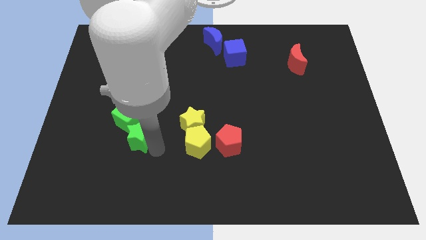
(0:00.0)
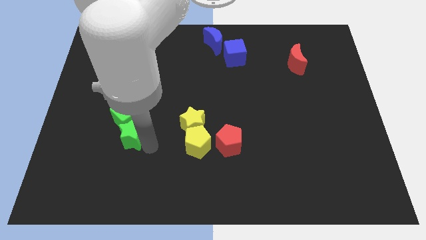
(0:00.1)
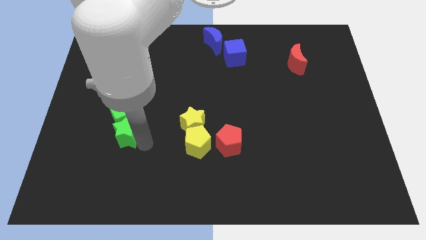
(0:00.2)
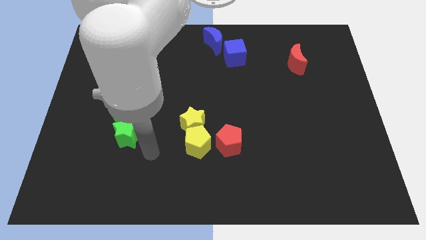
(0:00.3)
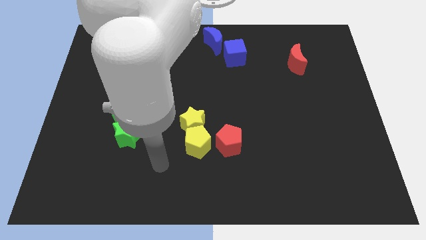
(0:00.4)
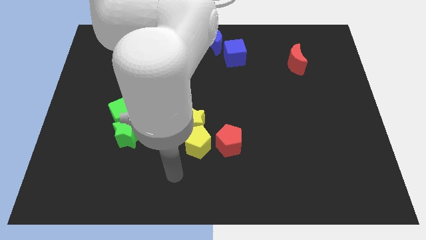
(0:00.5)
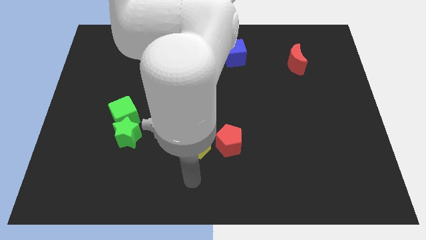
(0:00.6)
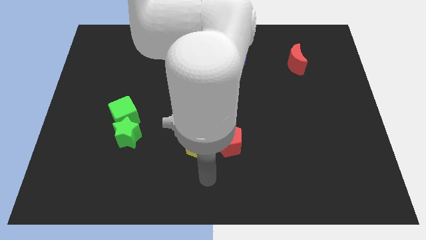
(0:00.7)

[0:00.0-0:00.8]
push the green star into the green cube

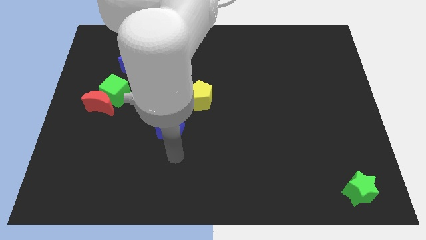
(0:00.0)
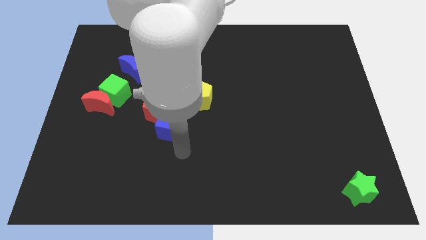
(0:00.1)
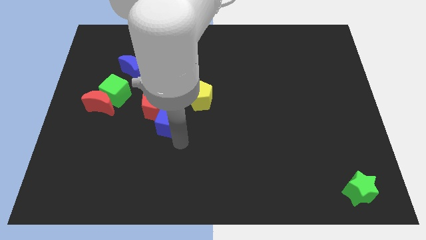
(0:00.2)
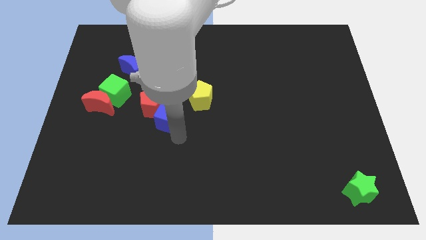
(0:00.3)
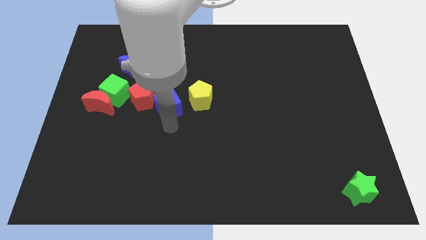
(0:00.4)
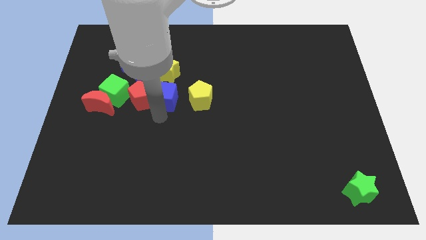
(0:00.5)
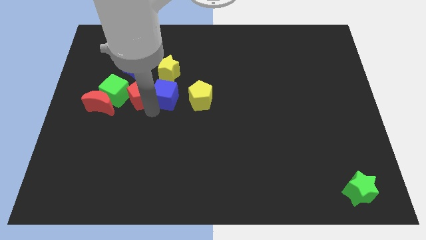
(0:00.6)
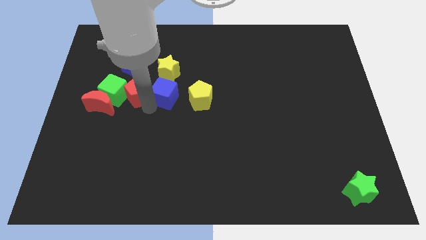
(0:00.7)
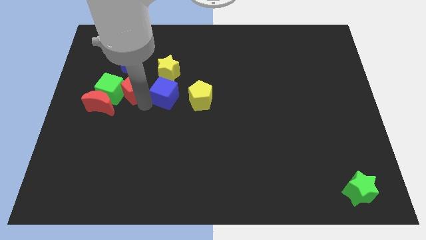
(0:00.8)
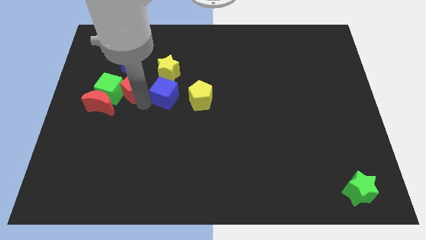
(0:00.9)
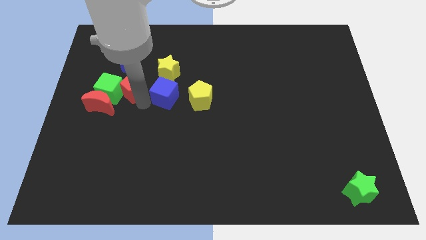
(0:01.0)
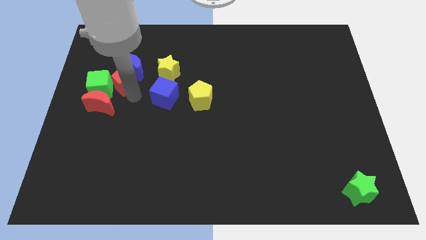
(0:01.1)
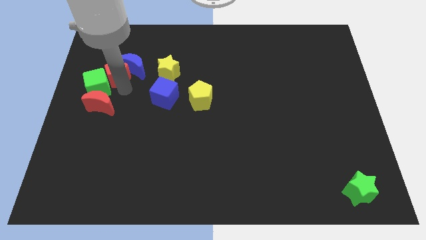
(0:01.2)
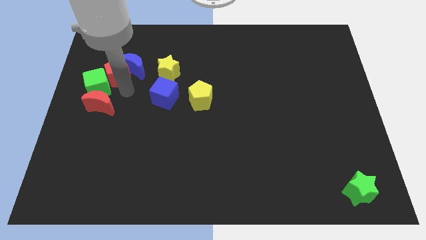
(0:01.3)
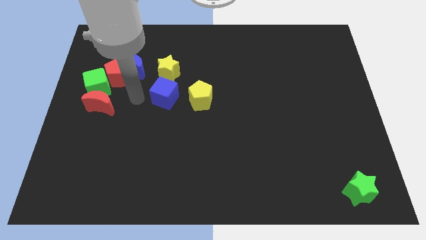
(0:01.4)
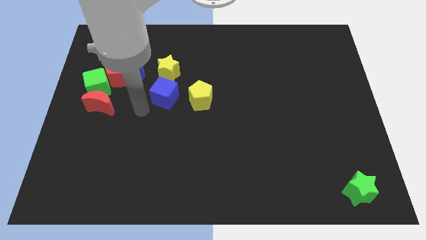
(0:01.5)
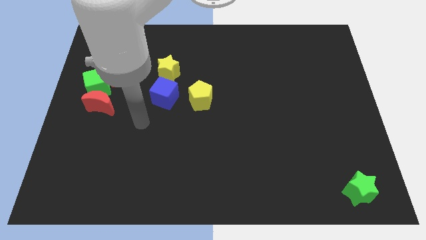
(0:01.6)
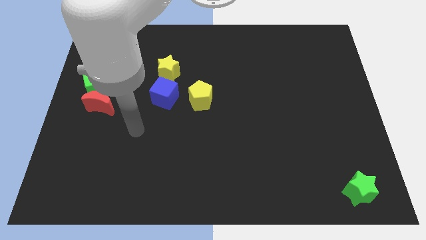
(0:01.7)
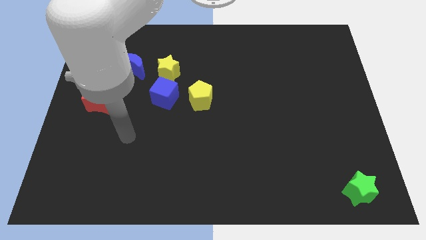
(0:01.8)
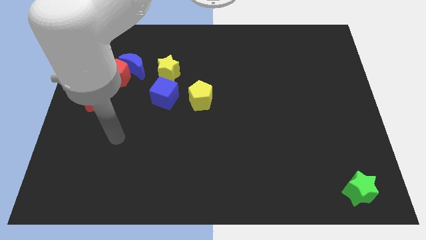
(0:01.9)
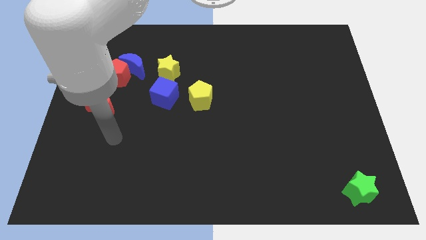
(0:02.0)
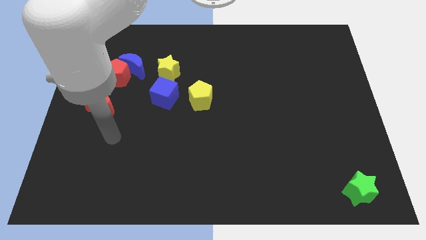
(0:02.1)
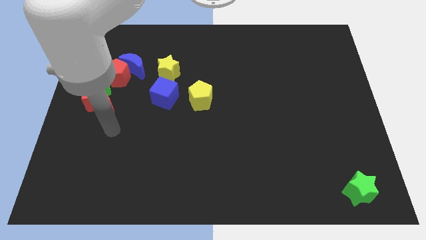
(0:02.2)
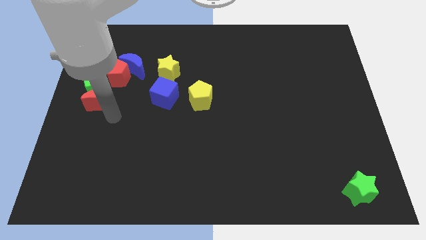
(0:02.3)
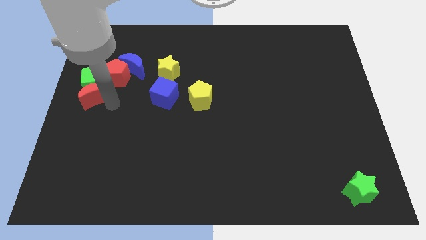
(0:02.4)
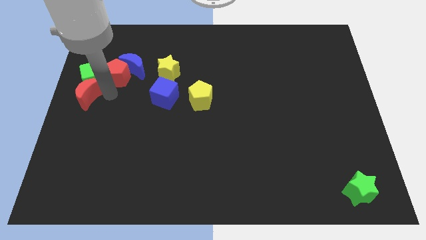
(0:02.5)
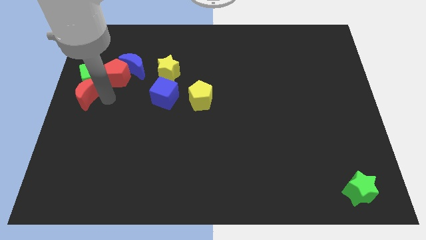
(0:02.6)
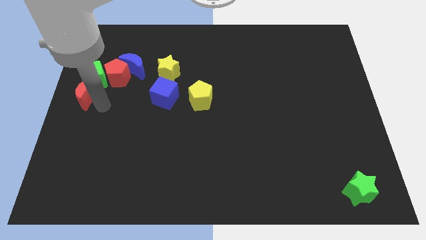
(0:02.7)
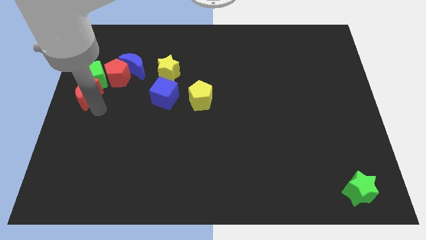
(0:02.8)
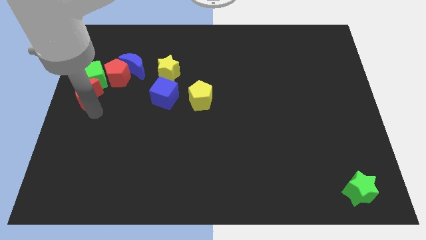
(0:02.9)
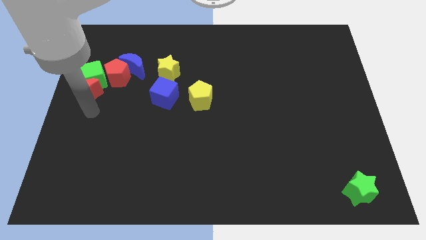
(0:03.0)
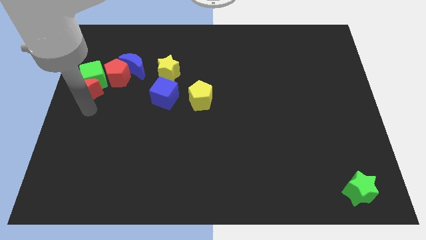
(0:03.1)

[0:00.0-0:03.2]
put the red pentagon left to the blue crescent

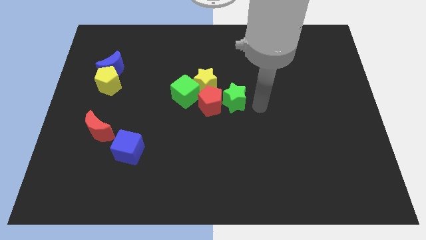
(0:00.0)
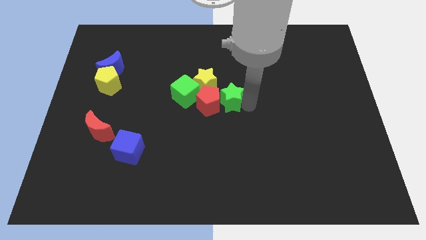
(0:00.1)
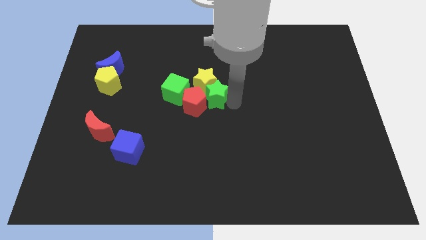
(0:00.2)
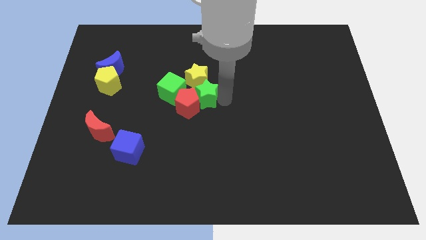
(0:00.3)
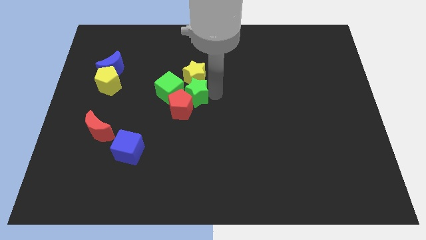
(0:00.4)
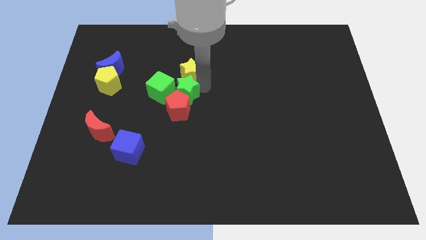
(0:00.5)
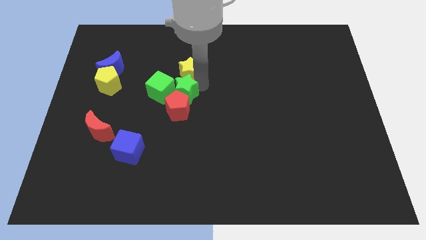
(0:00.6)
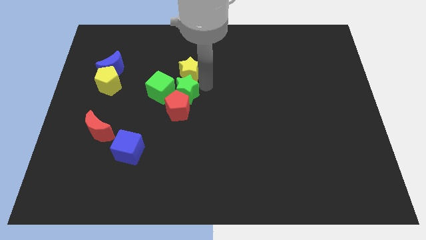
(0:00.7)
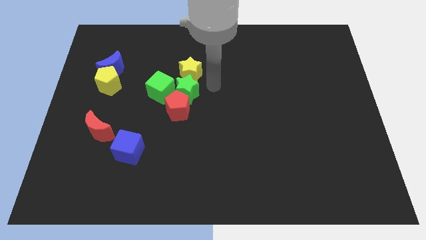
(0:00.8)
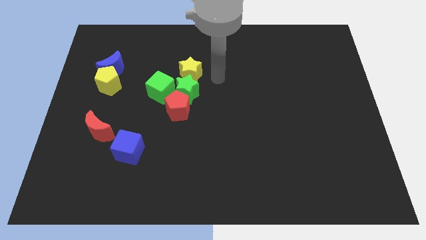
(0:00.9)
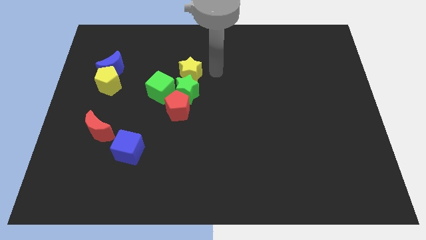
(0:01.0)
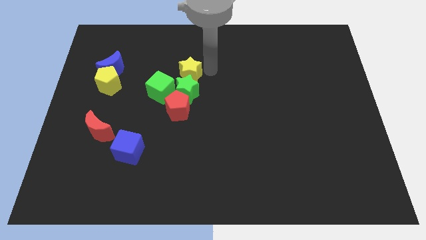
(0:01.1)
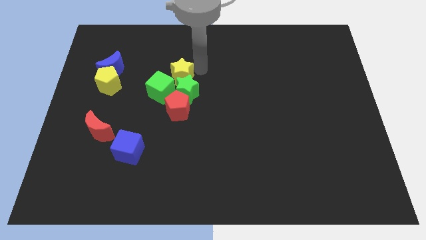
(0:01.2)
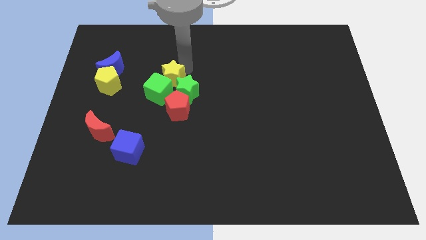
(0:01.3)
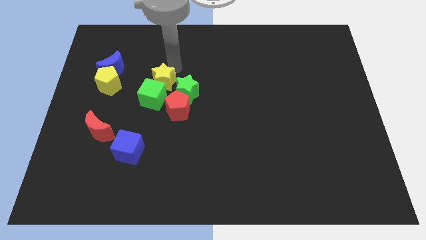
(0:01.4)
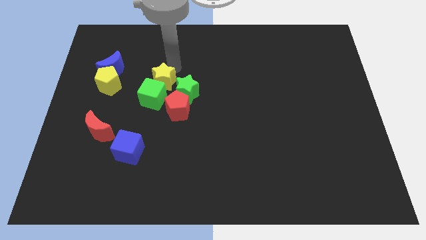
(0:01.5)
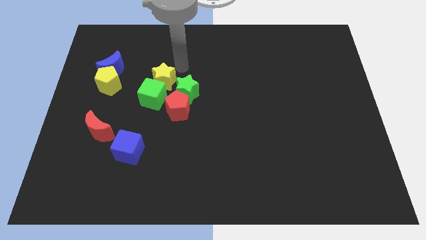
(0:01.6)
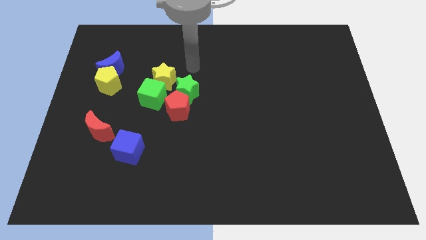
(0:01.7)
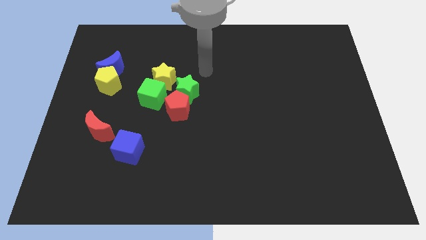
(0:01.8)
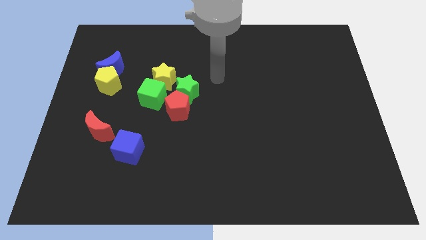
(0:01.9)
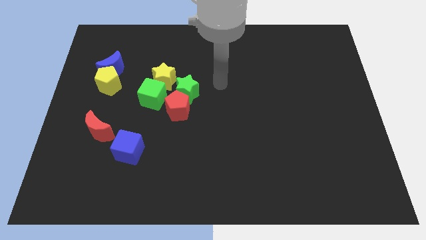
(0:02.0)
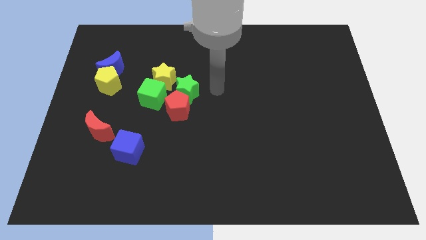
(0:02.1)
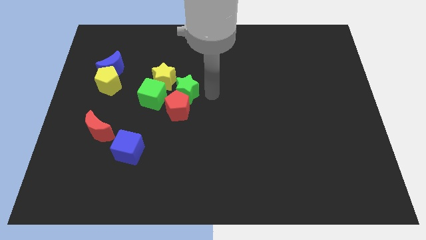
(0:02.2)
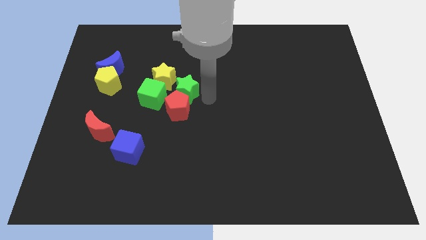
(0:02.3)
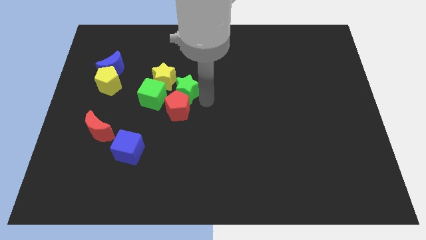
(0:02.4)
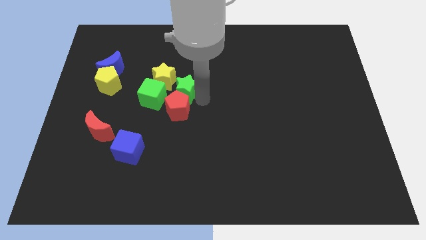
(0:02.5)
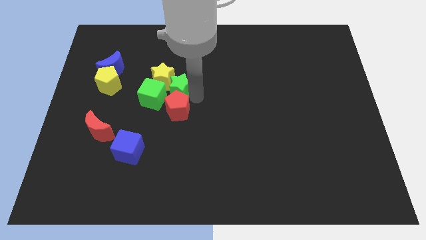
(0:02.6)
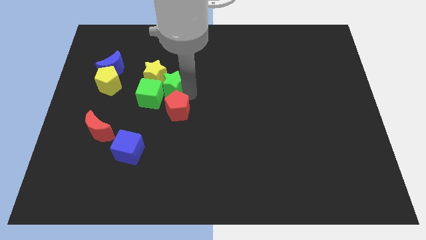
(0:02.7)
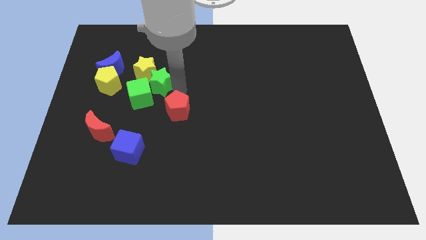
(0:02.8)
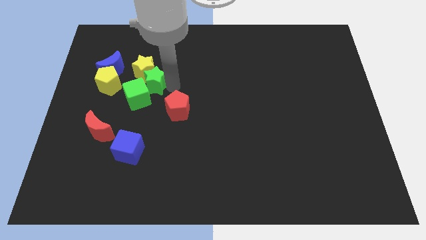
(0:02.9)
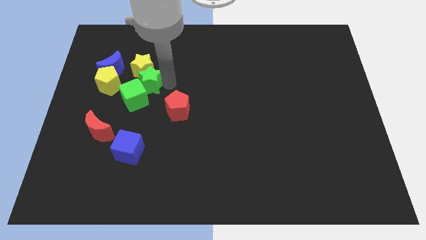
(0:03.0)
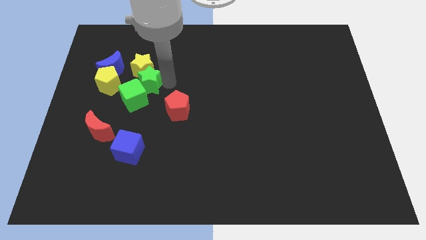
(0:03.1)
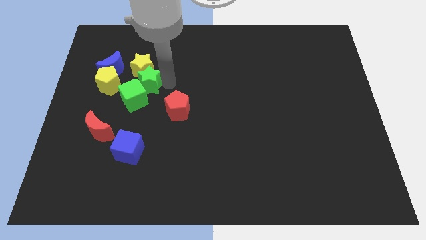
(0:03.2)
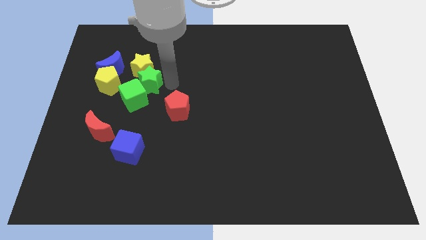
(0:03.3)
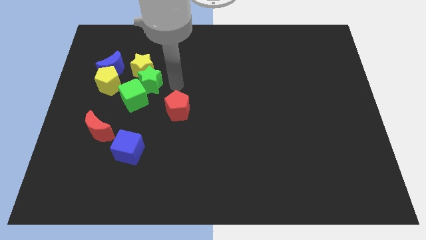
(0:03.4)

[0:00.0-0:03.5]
slide the green star into the green cube

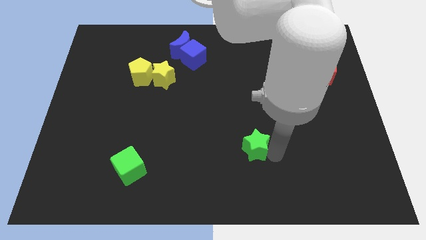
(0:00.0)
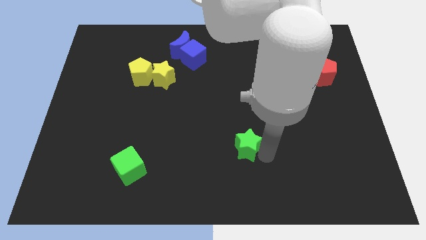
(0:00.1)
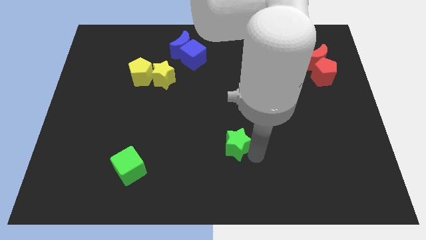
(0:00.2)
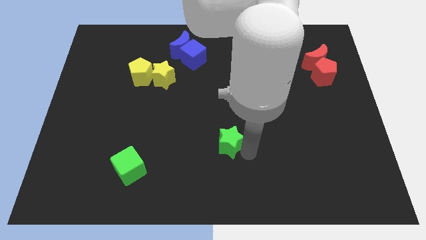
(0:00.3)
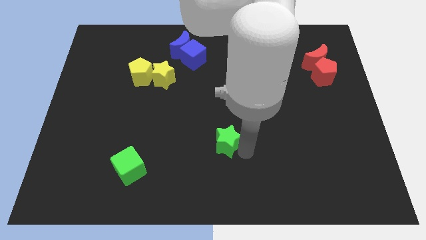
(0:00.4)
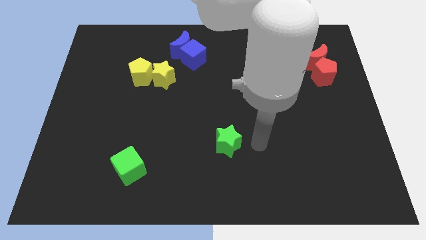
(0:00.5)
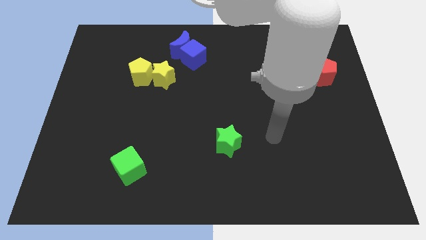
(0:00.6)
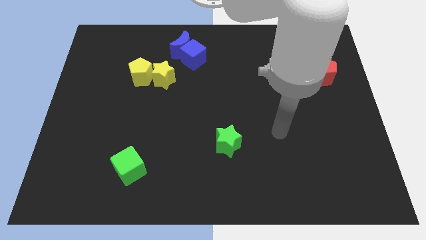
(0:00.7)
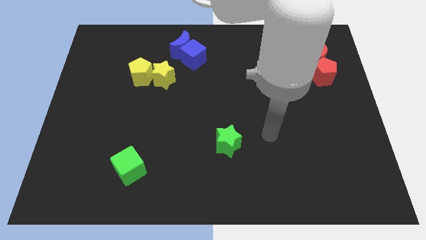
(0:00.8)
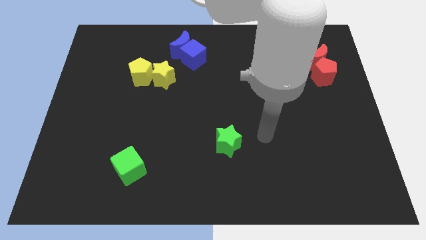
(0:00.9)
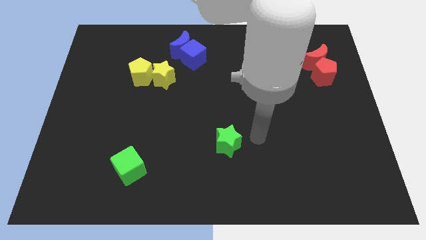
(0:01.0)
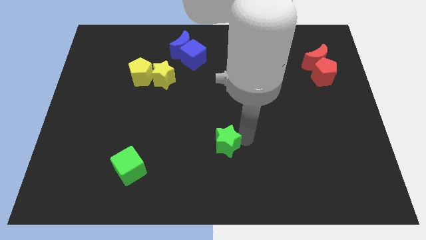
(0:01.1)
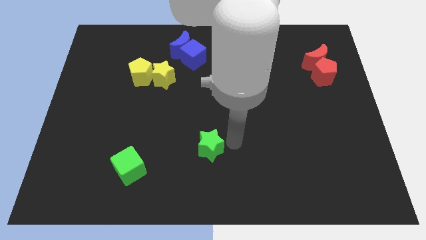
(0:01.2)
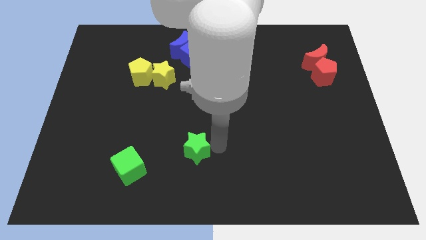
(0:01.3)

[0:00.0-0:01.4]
push the green star slightly to the left side

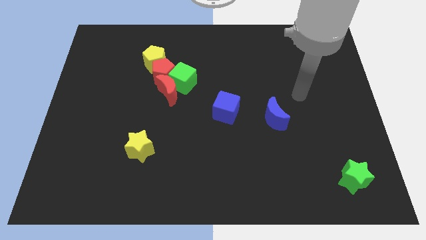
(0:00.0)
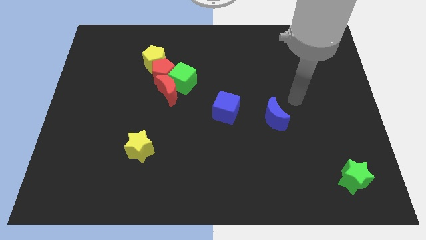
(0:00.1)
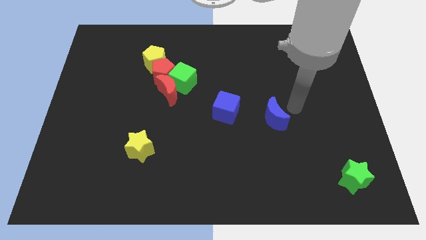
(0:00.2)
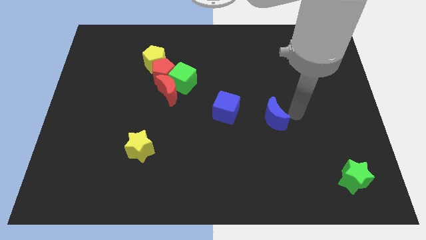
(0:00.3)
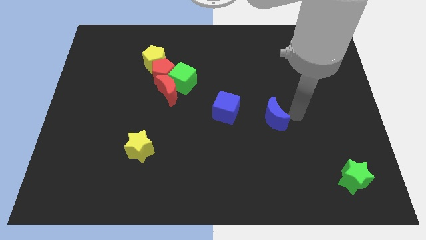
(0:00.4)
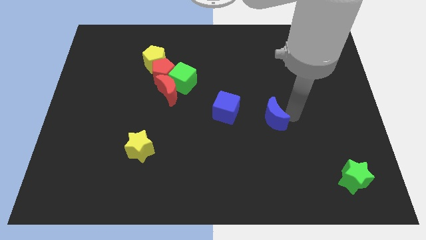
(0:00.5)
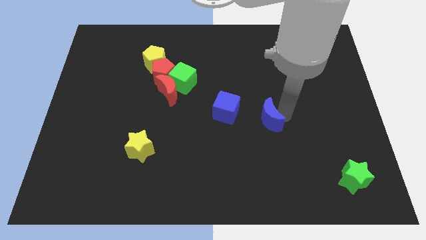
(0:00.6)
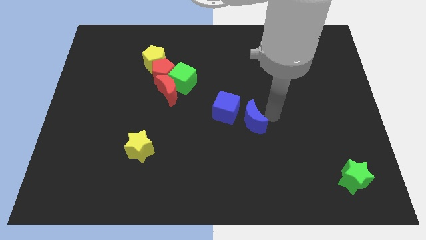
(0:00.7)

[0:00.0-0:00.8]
place the arm to the right of the blue moon
